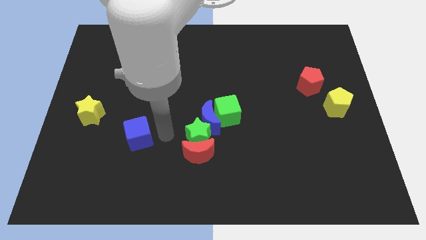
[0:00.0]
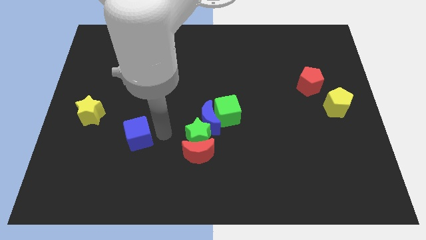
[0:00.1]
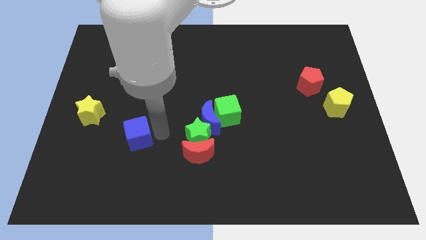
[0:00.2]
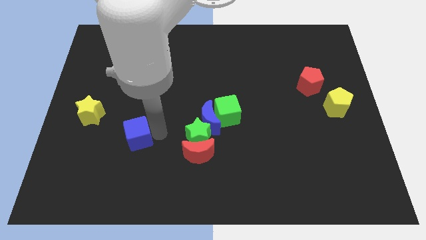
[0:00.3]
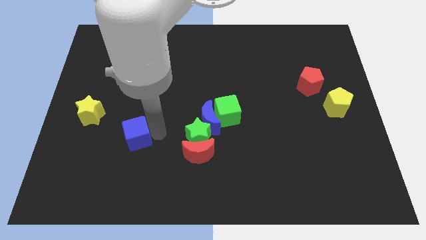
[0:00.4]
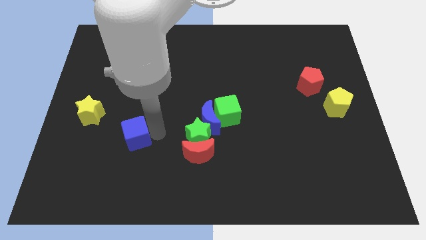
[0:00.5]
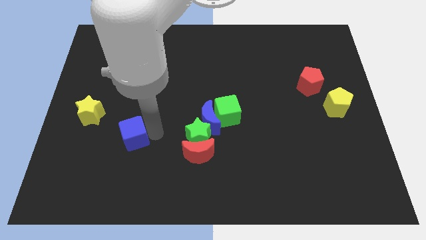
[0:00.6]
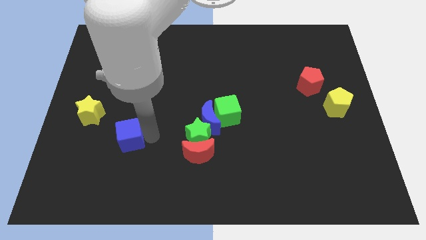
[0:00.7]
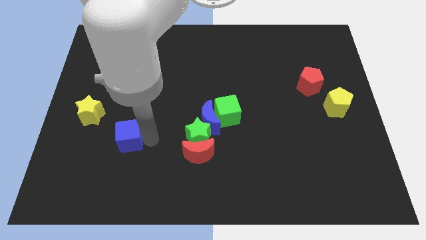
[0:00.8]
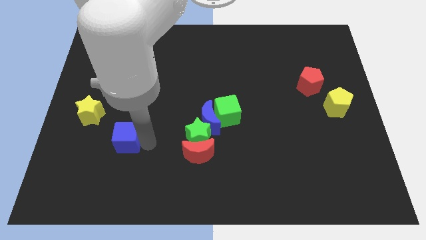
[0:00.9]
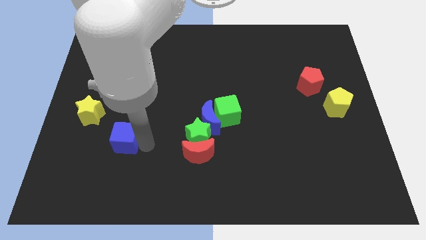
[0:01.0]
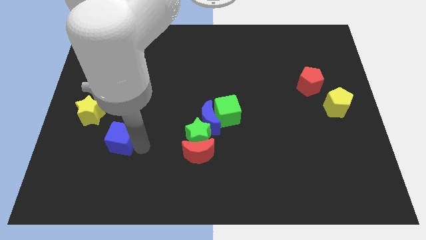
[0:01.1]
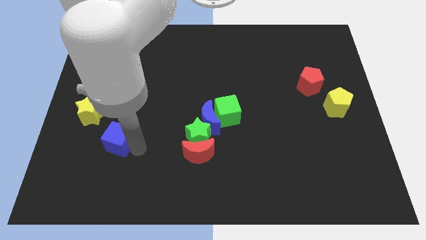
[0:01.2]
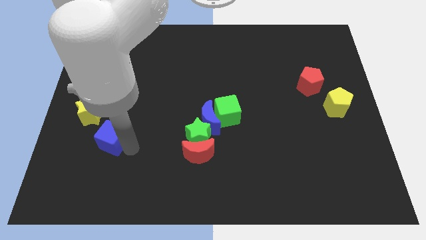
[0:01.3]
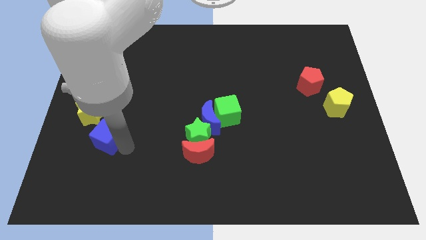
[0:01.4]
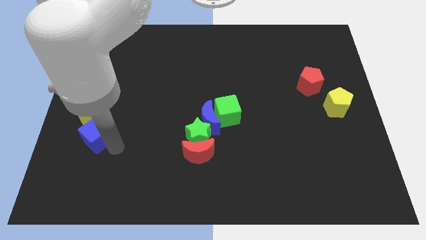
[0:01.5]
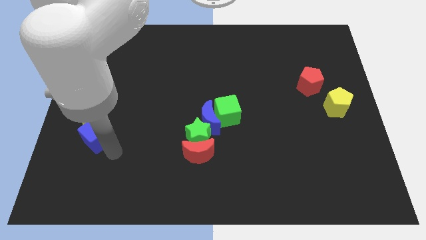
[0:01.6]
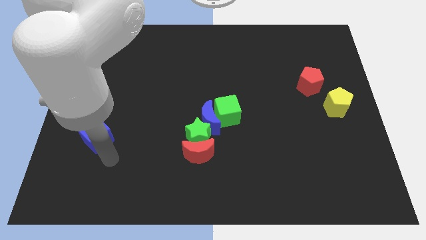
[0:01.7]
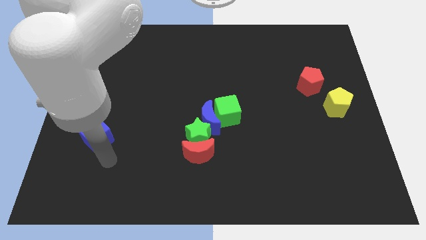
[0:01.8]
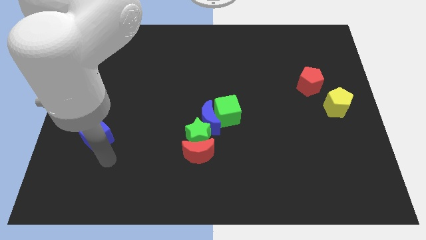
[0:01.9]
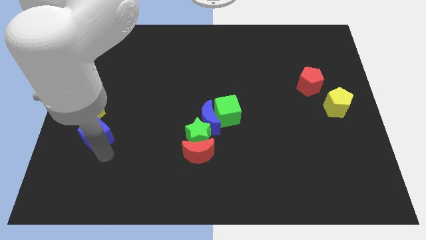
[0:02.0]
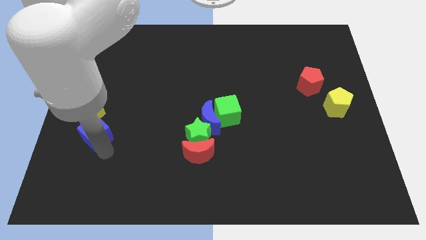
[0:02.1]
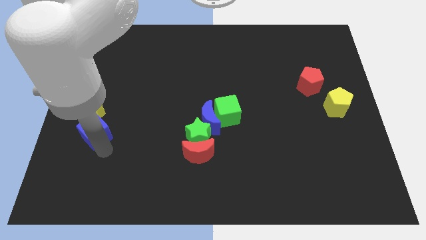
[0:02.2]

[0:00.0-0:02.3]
push blue cube near yellow star

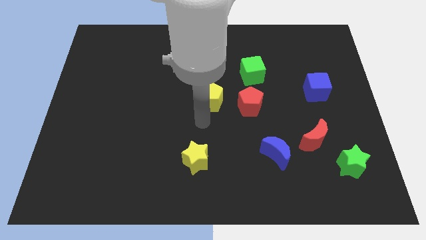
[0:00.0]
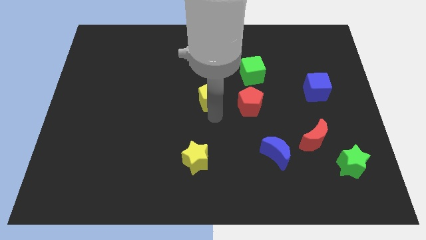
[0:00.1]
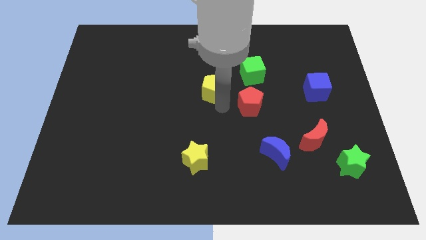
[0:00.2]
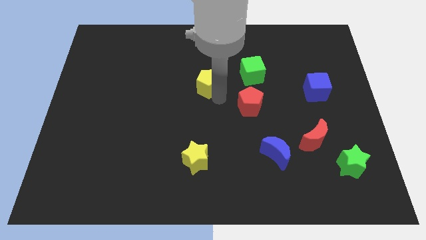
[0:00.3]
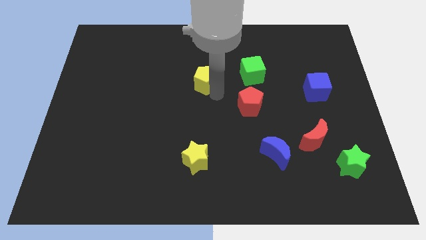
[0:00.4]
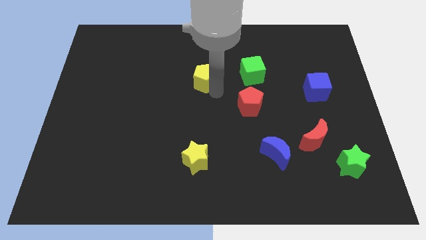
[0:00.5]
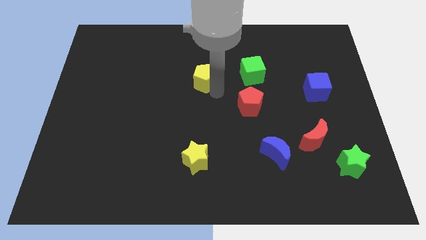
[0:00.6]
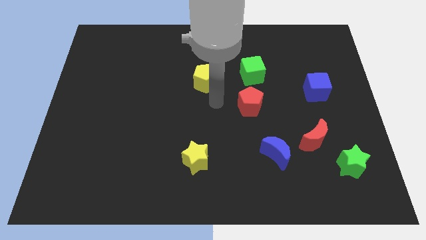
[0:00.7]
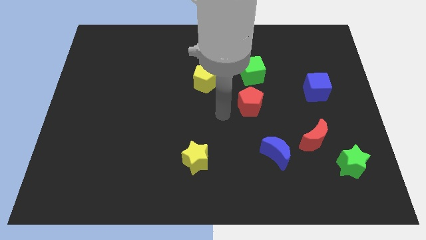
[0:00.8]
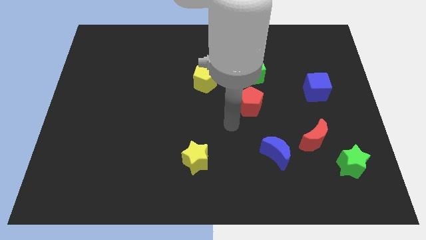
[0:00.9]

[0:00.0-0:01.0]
push the yellow pentagon to the top of the board

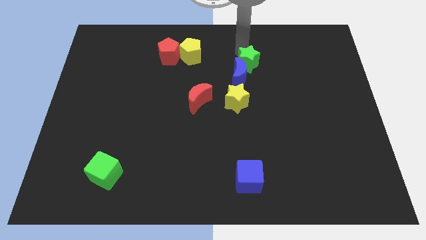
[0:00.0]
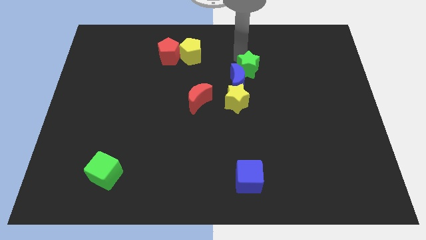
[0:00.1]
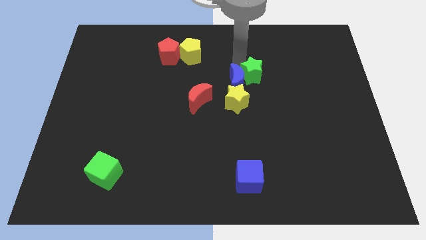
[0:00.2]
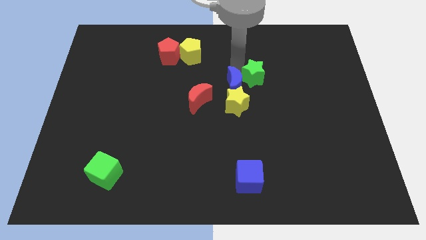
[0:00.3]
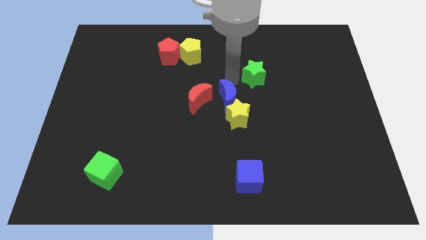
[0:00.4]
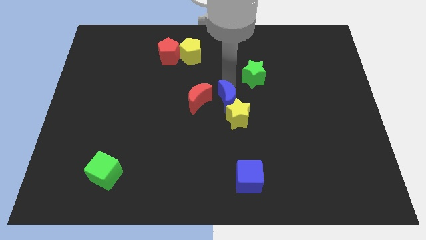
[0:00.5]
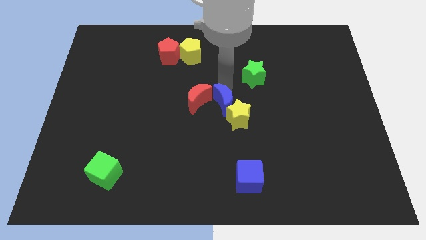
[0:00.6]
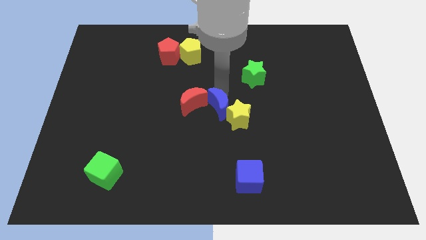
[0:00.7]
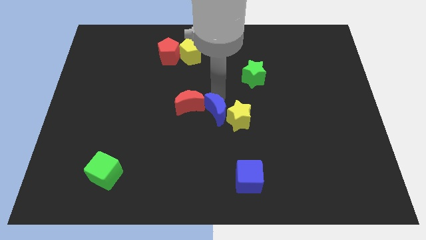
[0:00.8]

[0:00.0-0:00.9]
separate the green star and blue moon

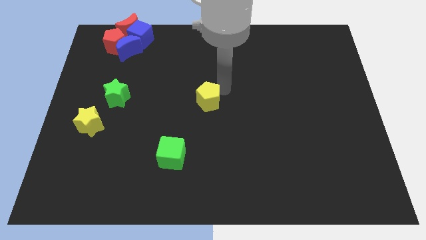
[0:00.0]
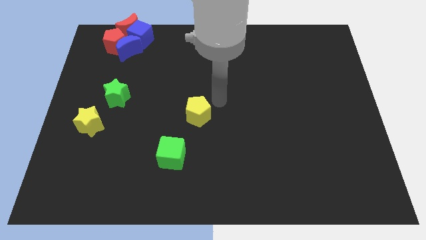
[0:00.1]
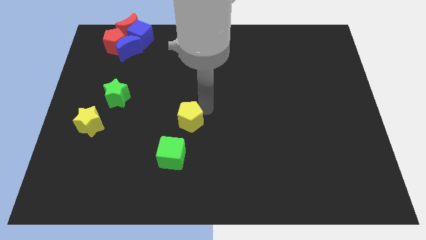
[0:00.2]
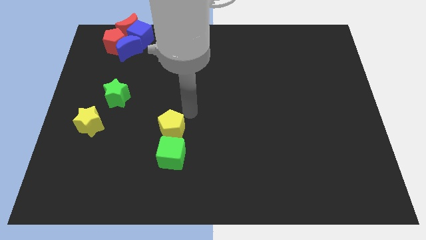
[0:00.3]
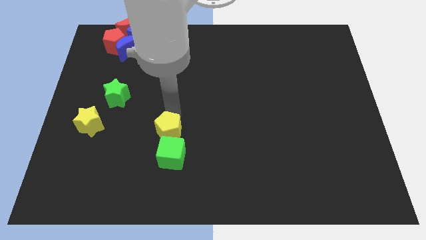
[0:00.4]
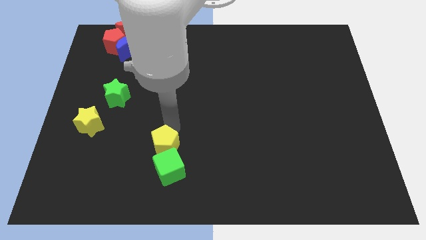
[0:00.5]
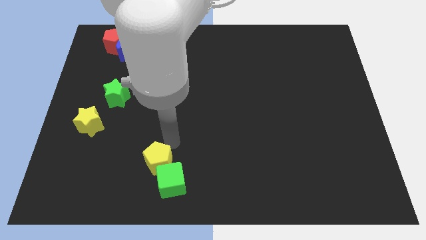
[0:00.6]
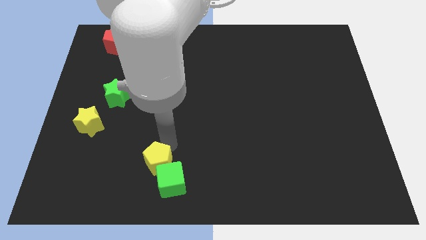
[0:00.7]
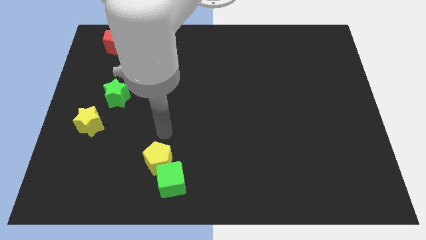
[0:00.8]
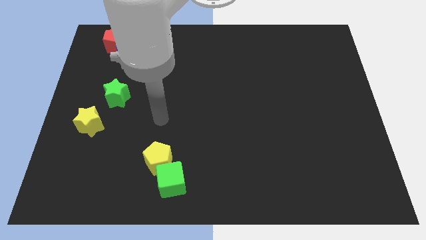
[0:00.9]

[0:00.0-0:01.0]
push the yellow pentagon into the green cube

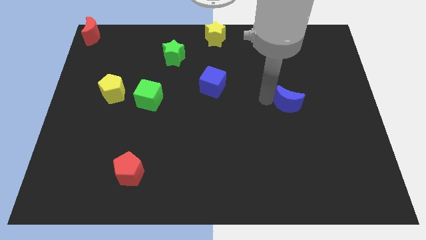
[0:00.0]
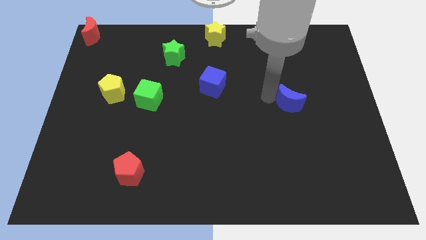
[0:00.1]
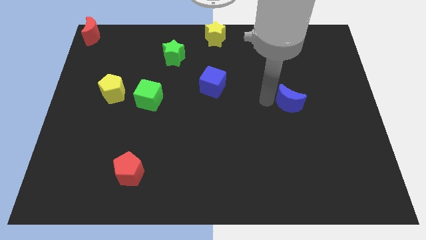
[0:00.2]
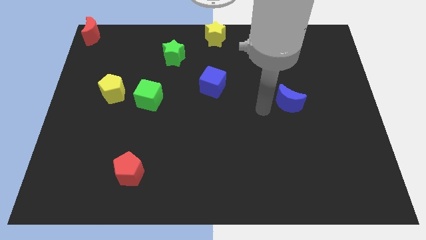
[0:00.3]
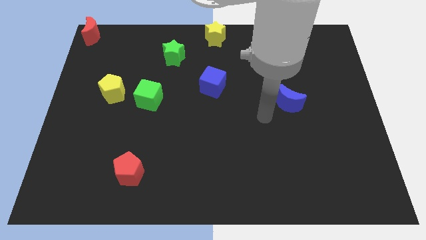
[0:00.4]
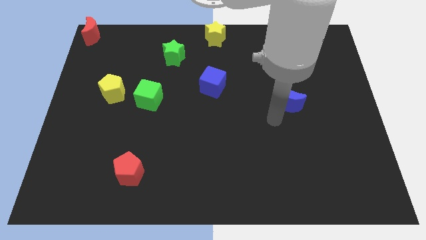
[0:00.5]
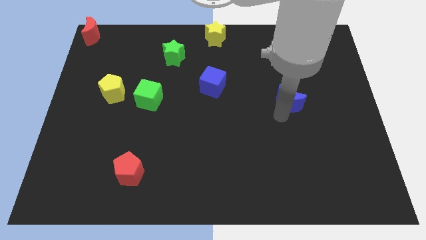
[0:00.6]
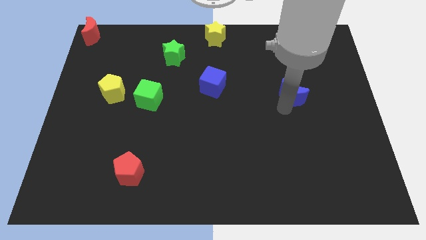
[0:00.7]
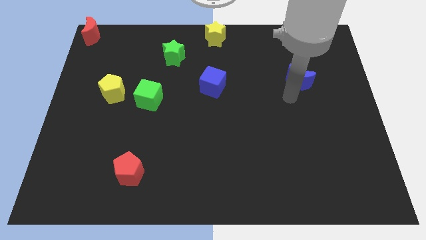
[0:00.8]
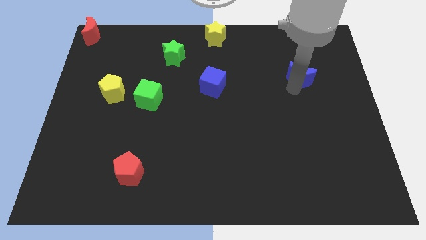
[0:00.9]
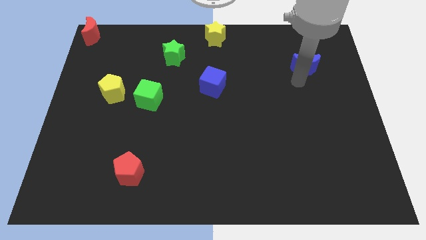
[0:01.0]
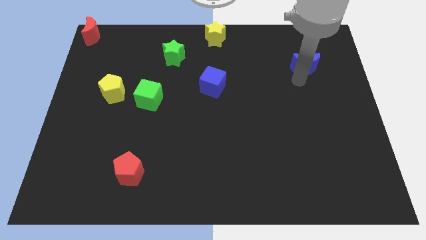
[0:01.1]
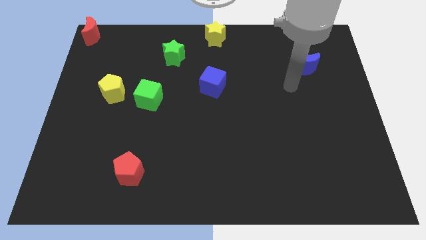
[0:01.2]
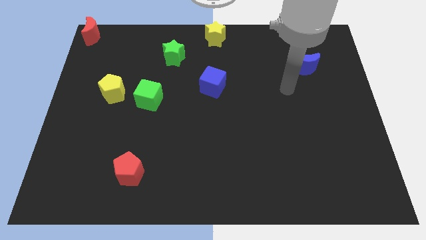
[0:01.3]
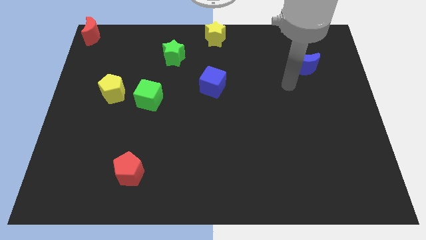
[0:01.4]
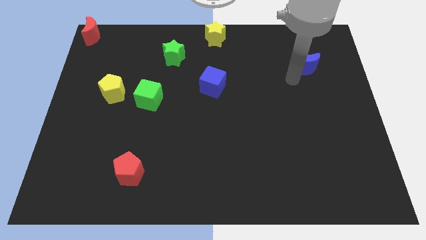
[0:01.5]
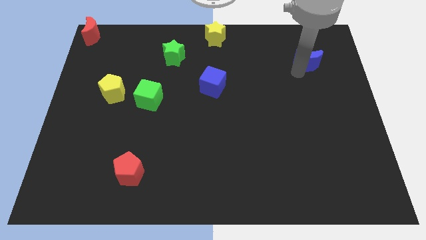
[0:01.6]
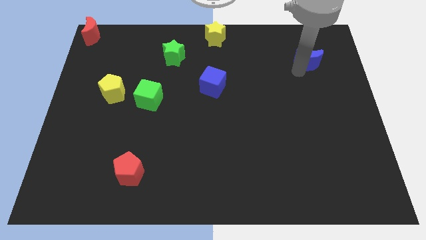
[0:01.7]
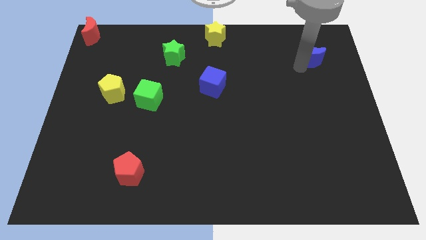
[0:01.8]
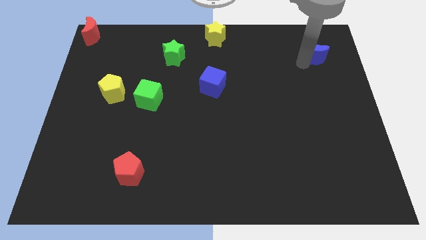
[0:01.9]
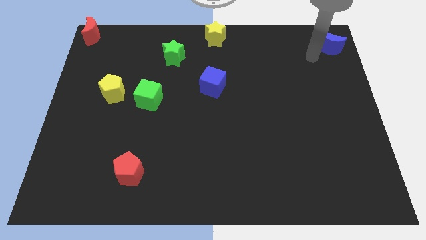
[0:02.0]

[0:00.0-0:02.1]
place the blue moon horizontal to the green star

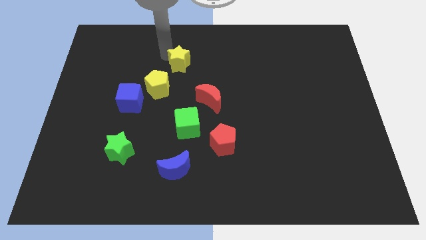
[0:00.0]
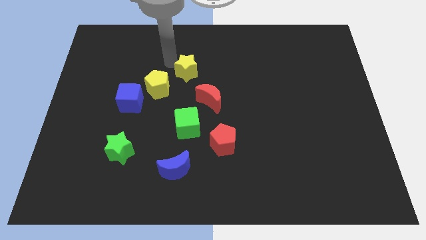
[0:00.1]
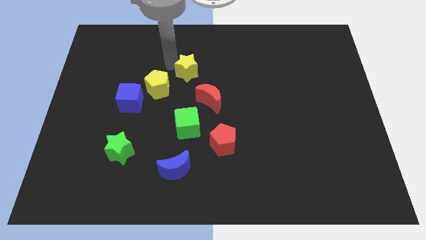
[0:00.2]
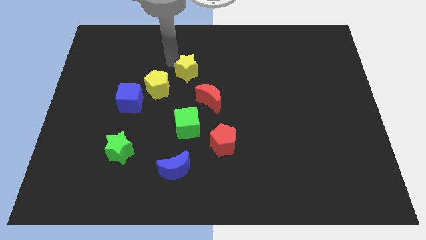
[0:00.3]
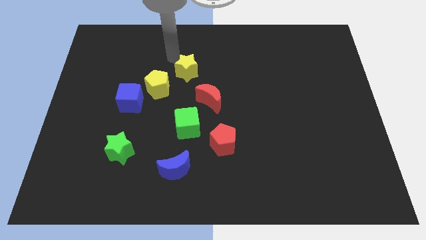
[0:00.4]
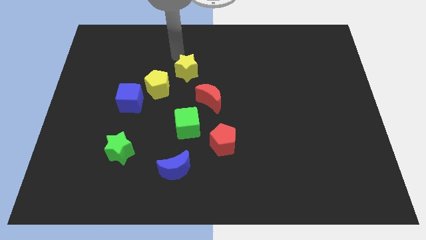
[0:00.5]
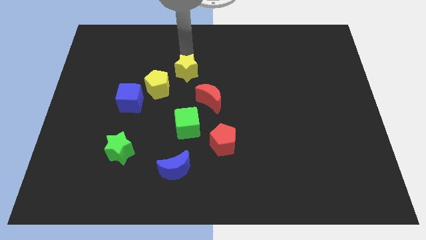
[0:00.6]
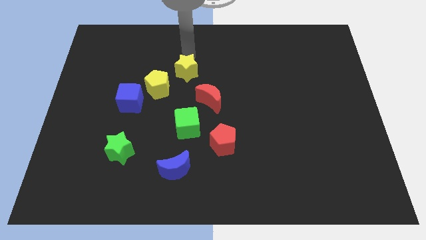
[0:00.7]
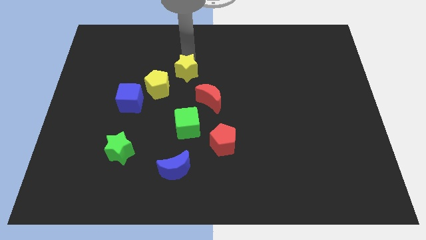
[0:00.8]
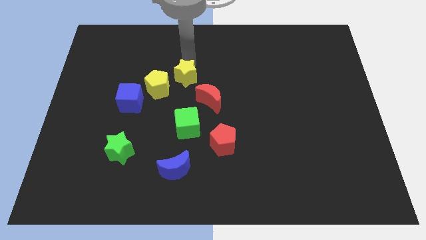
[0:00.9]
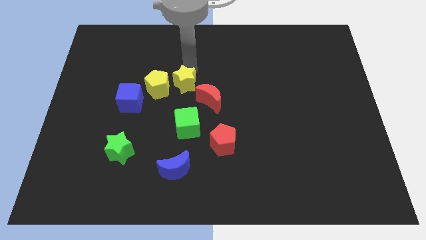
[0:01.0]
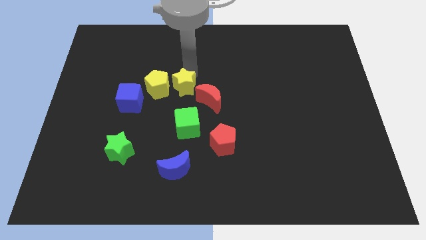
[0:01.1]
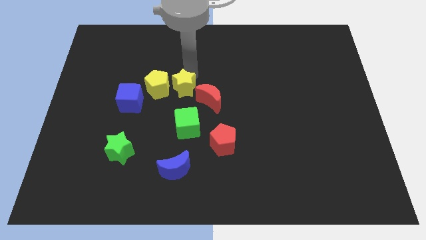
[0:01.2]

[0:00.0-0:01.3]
push the yellow star to the right of the yellow pentagon

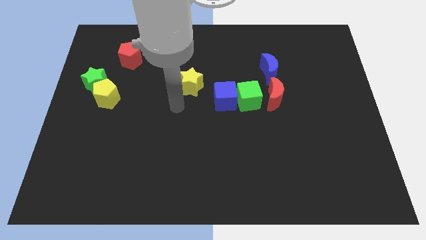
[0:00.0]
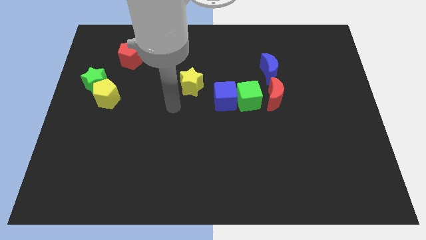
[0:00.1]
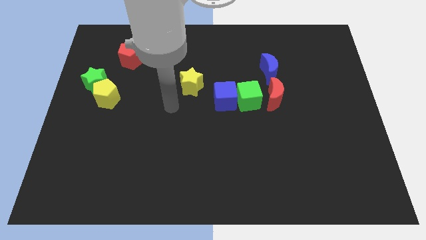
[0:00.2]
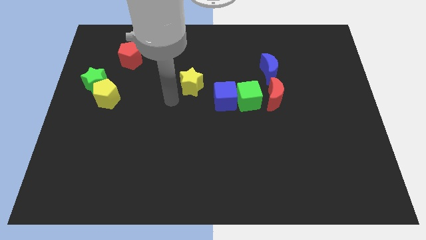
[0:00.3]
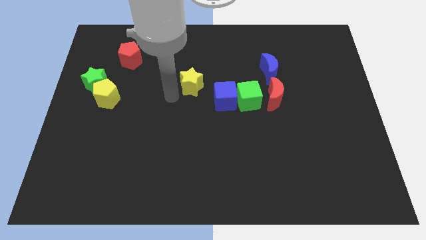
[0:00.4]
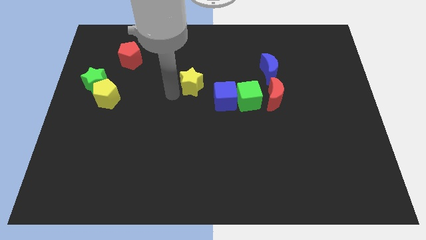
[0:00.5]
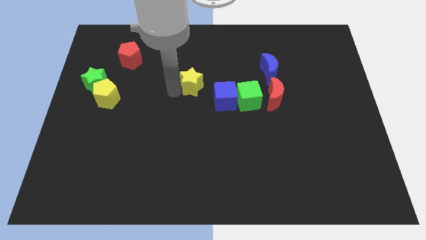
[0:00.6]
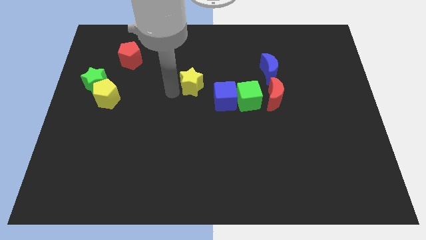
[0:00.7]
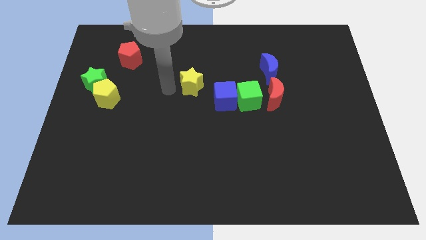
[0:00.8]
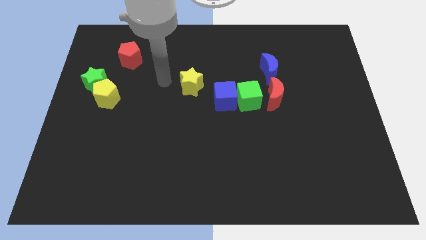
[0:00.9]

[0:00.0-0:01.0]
move your hand to the left of the yellow star
